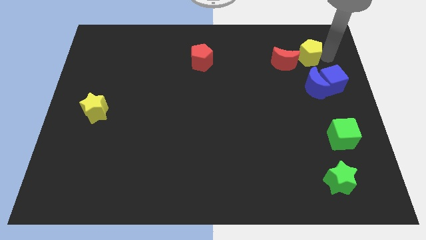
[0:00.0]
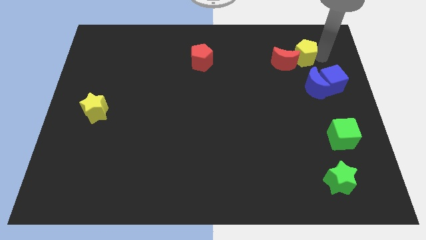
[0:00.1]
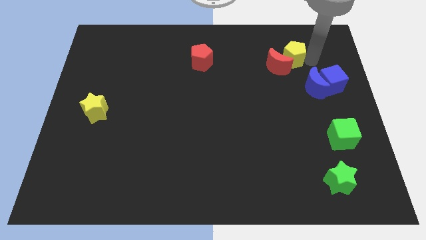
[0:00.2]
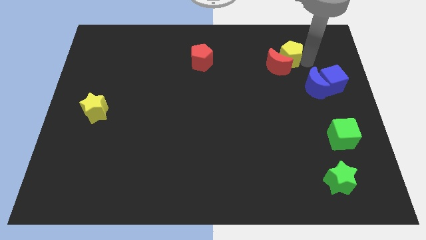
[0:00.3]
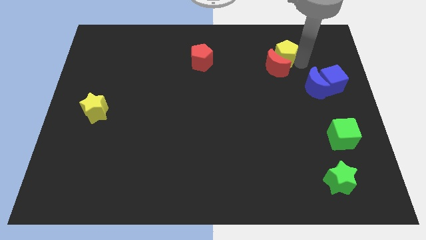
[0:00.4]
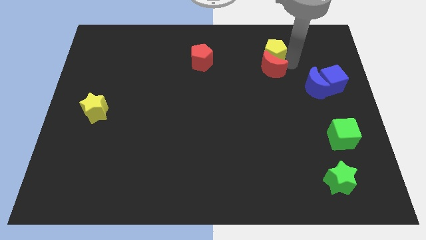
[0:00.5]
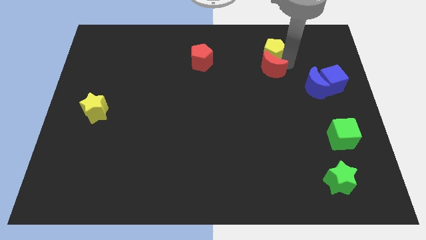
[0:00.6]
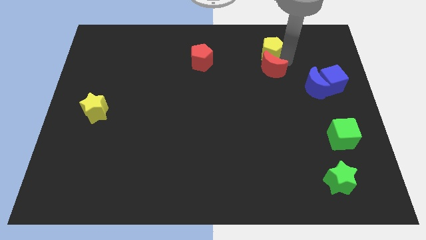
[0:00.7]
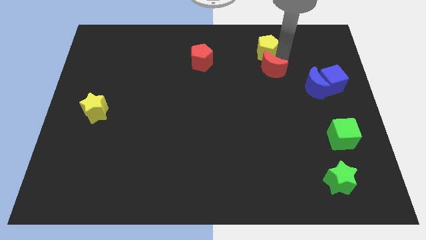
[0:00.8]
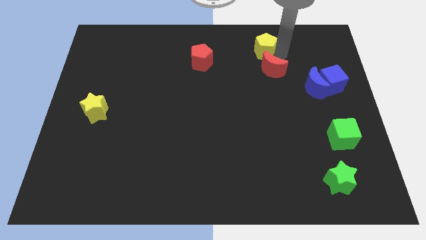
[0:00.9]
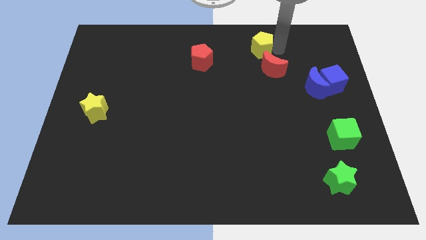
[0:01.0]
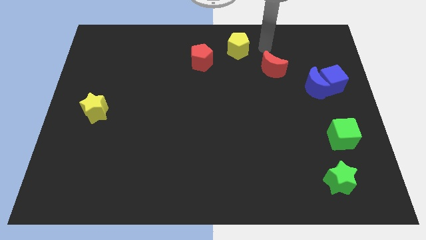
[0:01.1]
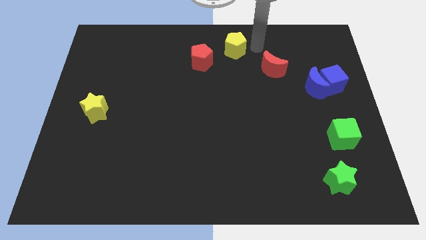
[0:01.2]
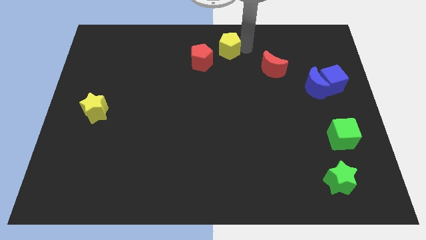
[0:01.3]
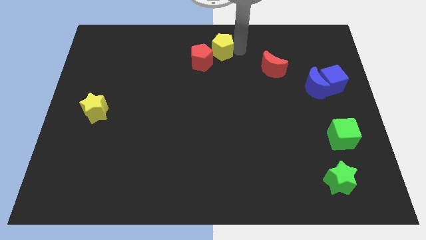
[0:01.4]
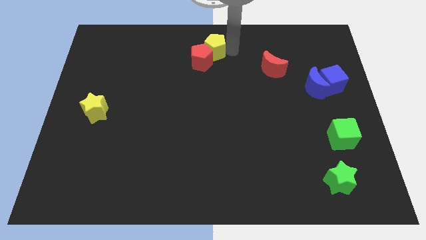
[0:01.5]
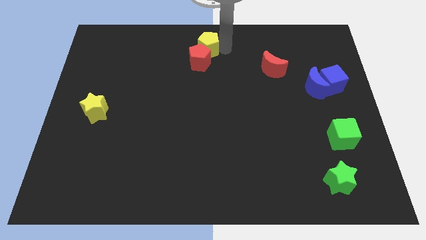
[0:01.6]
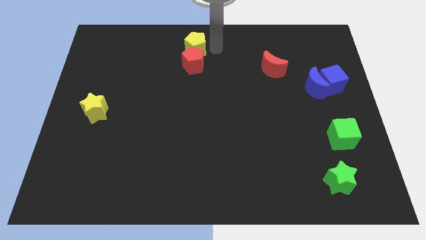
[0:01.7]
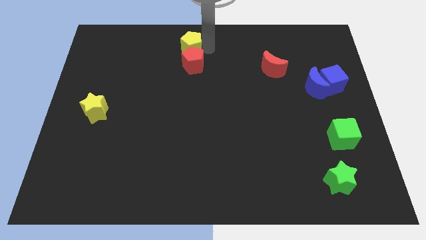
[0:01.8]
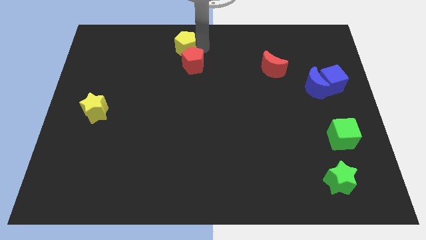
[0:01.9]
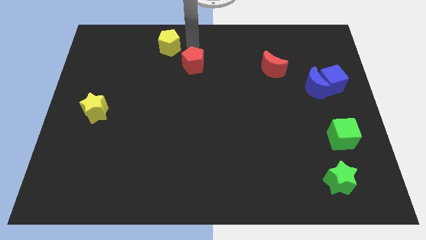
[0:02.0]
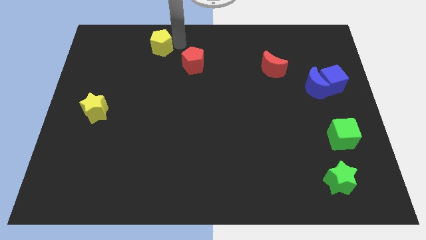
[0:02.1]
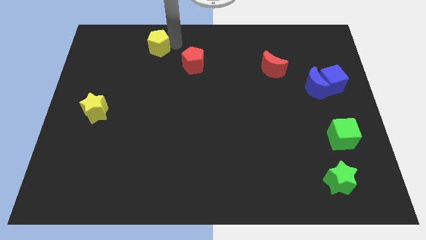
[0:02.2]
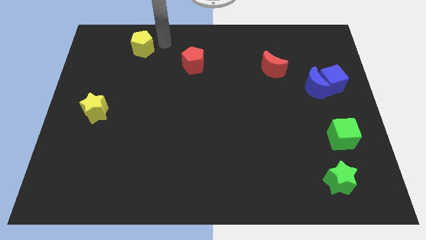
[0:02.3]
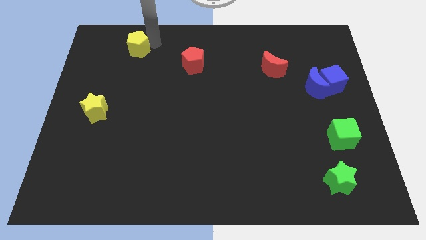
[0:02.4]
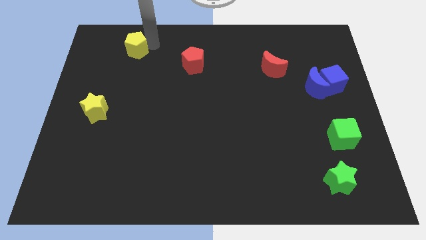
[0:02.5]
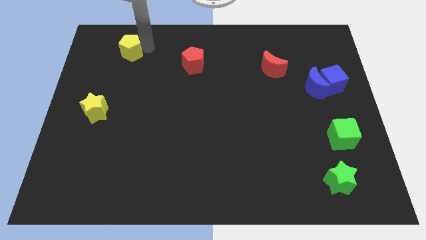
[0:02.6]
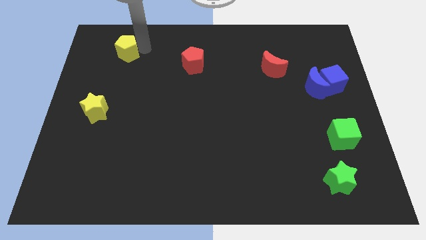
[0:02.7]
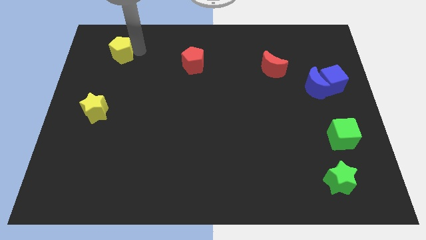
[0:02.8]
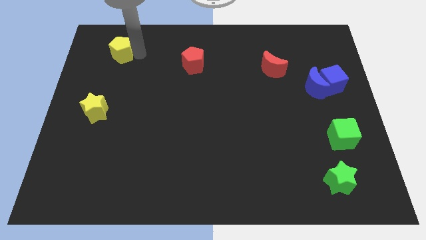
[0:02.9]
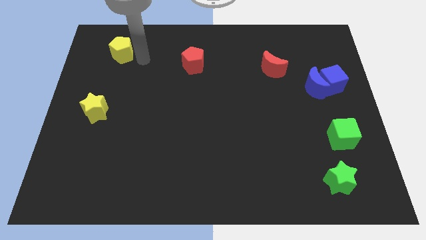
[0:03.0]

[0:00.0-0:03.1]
move the yellow pentagon to the horizontally left of the red pentagon

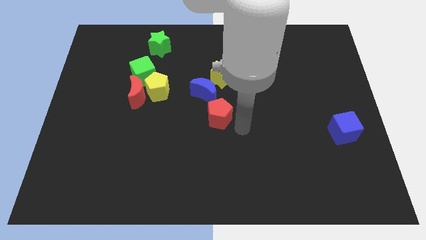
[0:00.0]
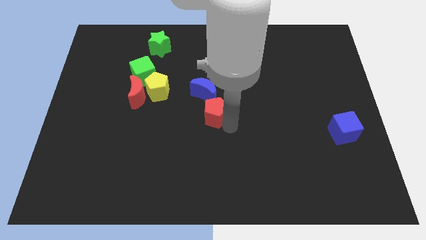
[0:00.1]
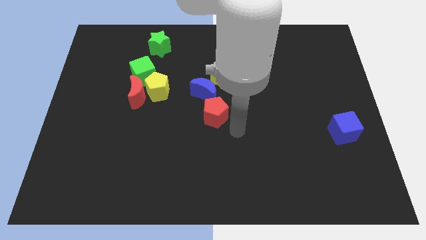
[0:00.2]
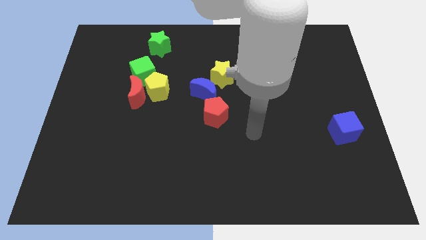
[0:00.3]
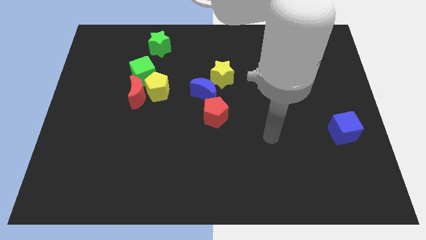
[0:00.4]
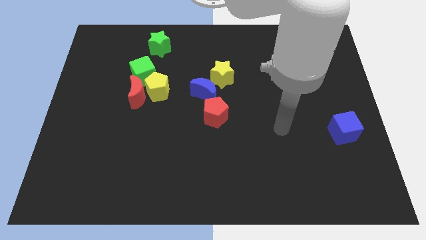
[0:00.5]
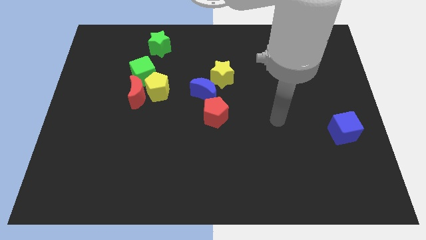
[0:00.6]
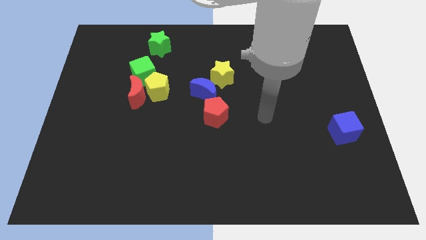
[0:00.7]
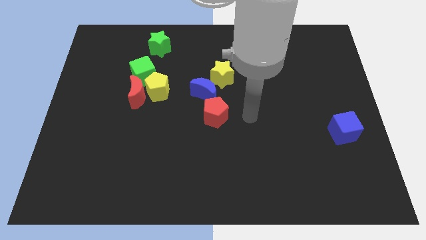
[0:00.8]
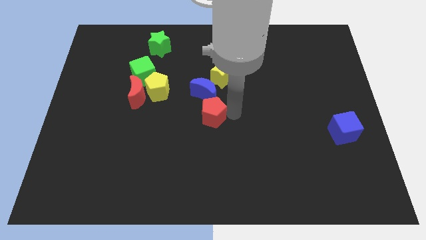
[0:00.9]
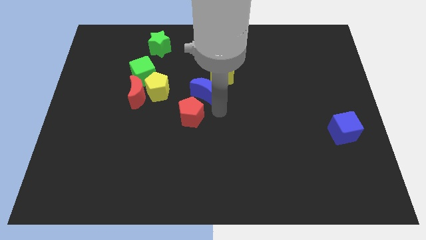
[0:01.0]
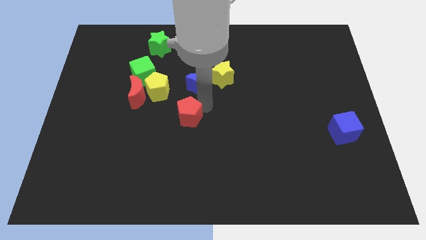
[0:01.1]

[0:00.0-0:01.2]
slightly push the red pentagon below the blue moon

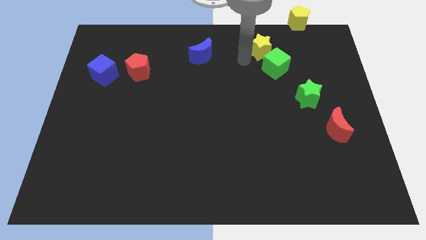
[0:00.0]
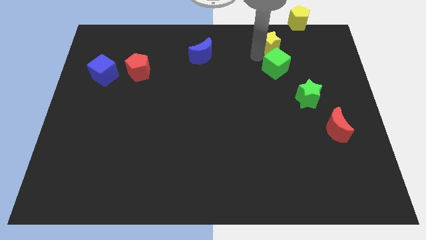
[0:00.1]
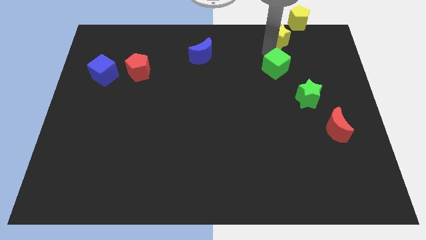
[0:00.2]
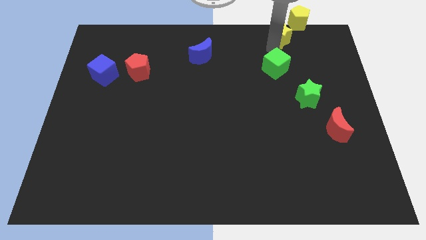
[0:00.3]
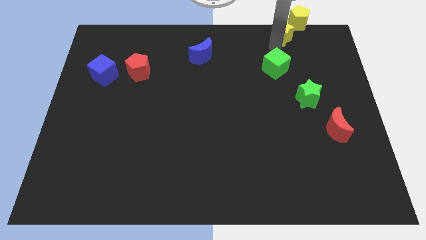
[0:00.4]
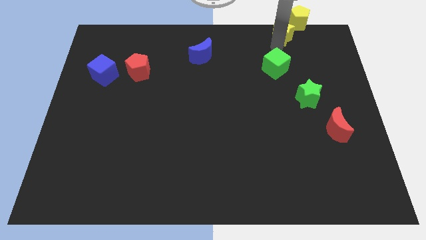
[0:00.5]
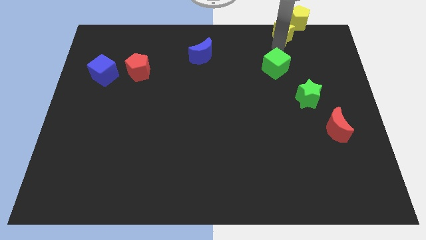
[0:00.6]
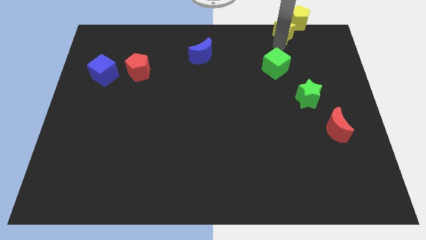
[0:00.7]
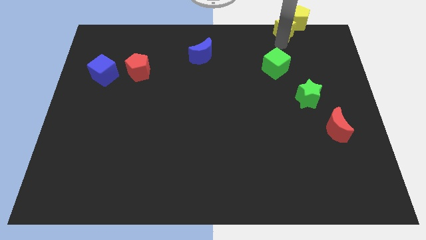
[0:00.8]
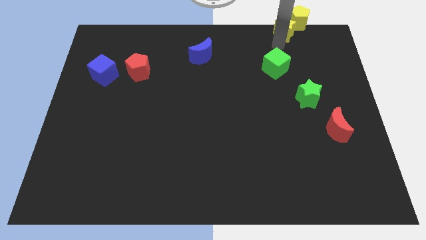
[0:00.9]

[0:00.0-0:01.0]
push the yellow star into the yellow pentagon

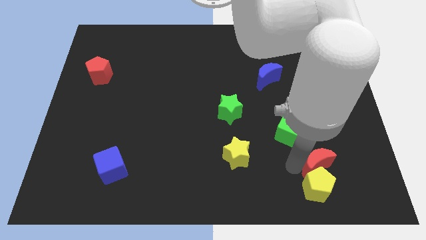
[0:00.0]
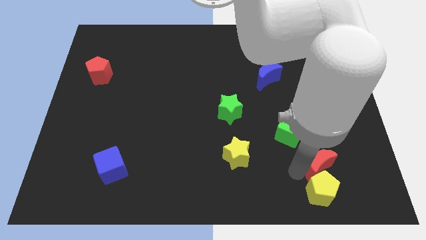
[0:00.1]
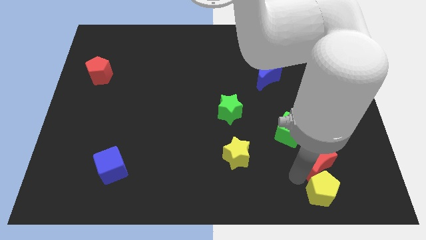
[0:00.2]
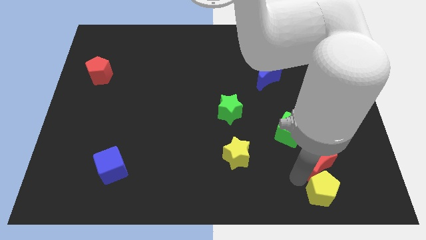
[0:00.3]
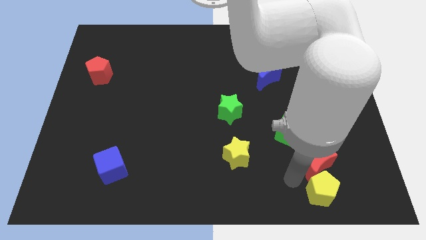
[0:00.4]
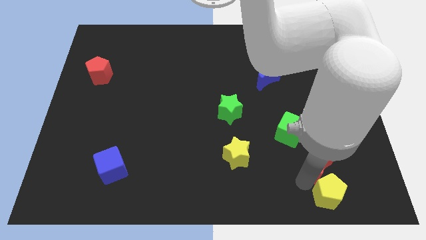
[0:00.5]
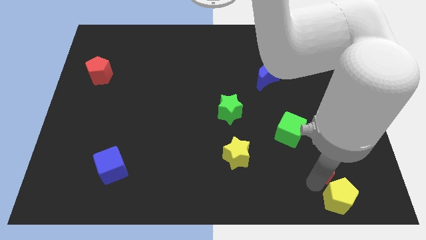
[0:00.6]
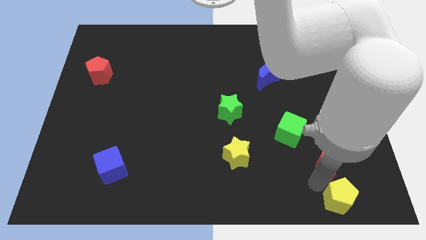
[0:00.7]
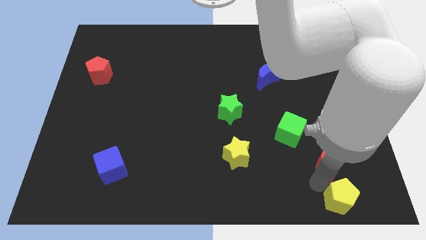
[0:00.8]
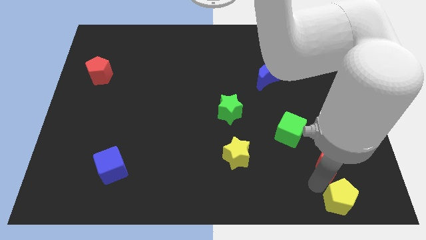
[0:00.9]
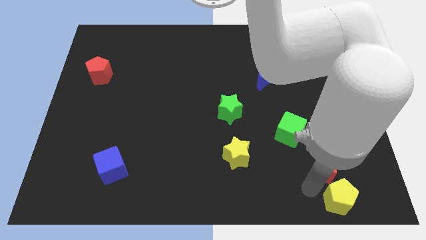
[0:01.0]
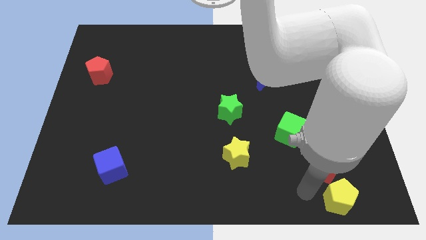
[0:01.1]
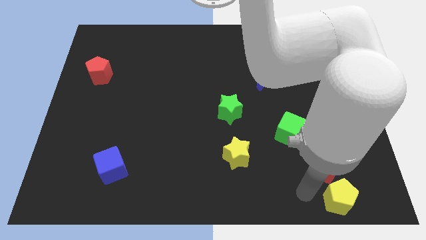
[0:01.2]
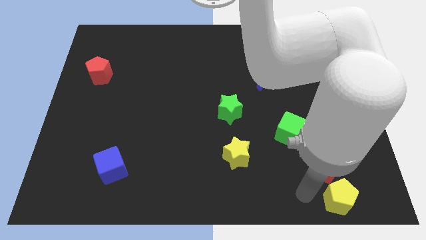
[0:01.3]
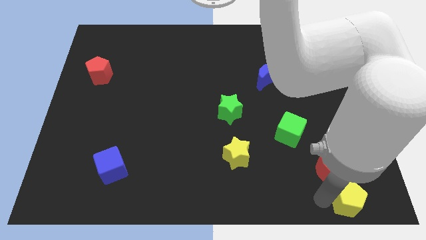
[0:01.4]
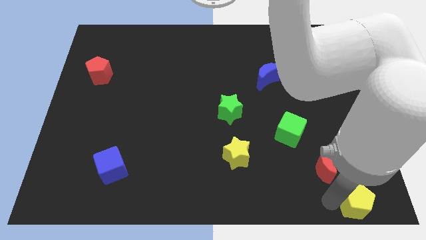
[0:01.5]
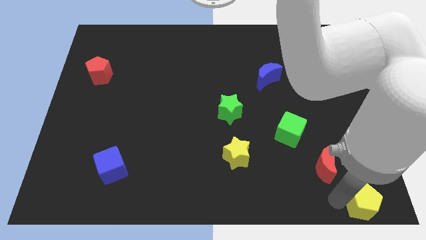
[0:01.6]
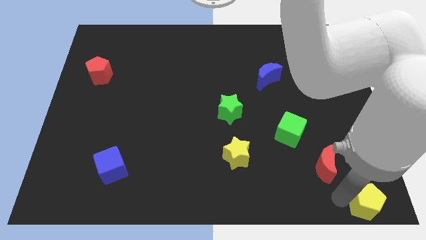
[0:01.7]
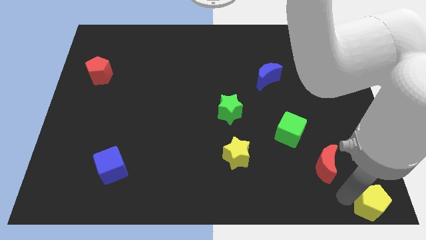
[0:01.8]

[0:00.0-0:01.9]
separate the yellow pentagon from the red moon

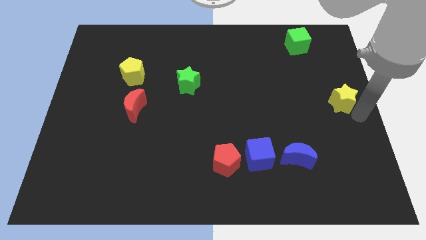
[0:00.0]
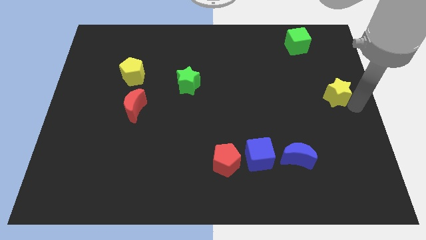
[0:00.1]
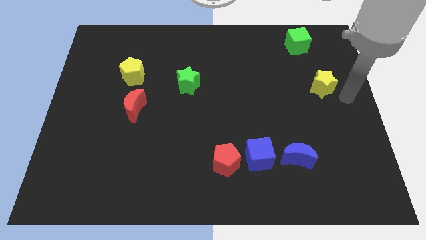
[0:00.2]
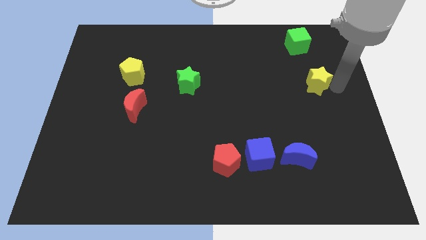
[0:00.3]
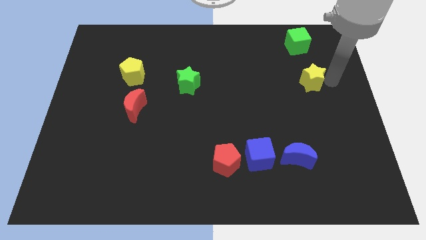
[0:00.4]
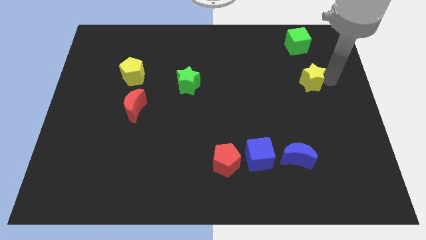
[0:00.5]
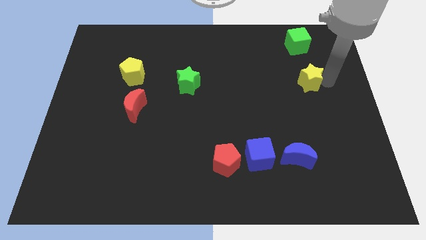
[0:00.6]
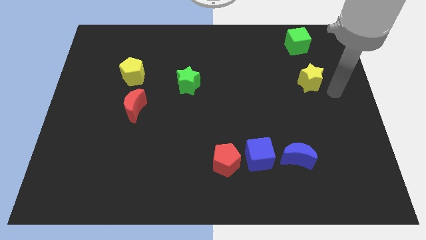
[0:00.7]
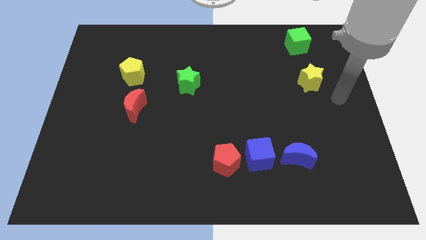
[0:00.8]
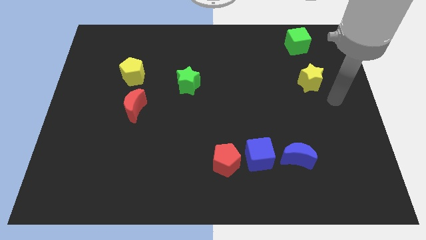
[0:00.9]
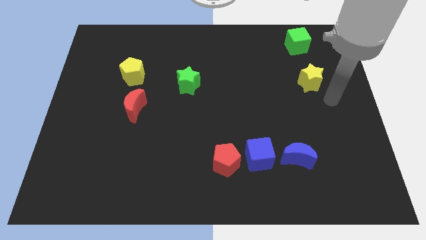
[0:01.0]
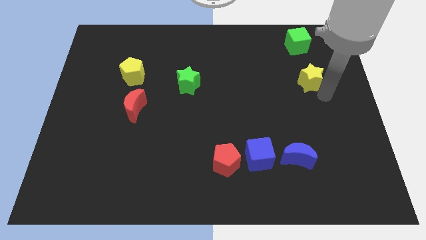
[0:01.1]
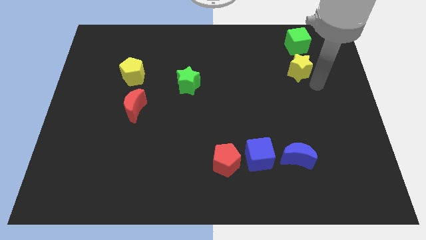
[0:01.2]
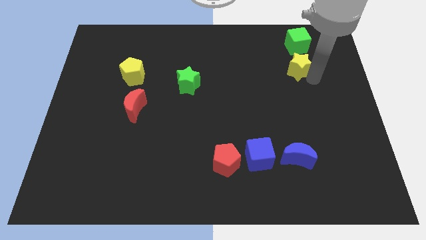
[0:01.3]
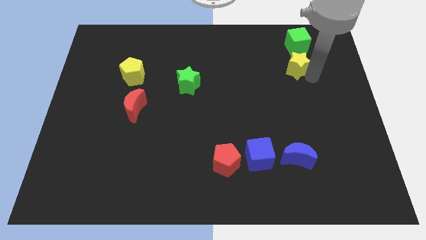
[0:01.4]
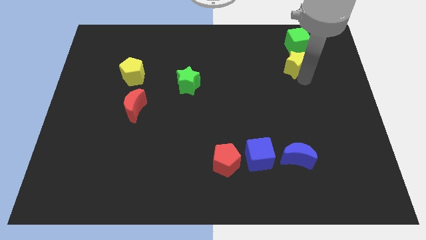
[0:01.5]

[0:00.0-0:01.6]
slide the yellow star towards the bottom side of the green cube
